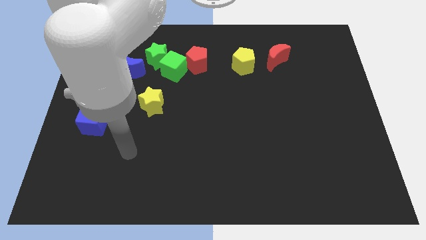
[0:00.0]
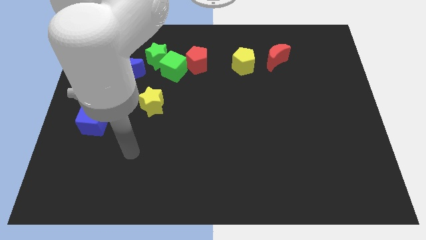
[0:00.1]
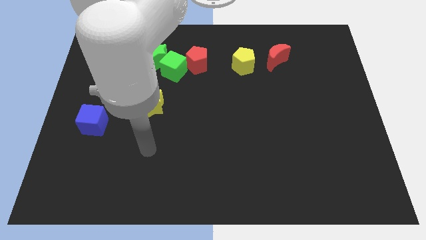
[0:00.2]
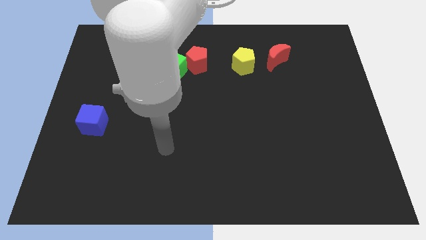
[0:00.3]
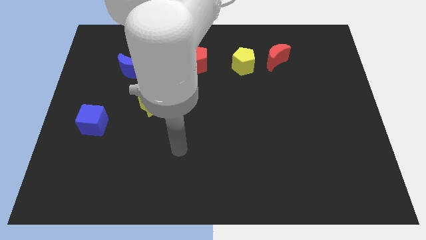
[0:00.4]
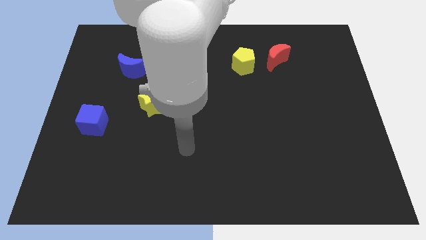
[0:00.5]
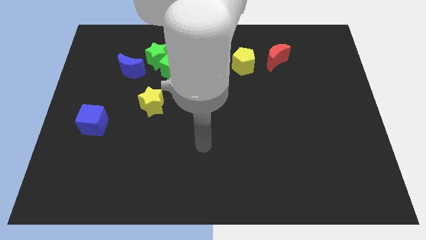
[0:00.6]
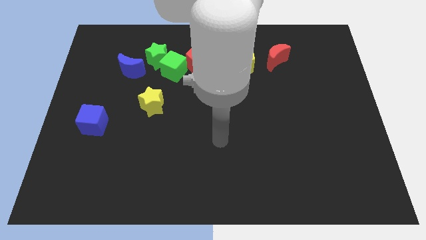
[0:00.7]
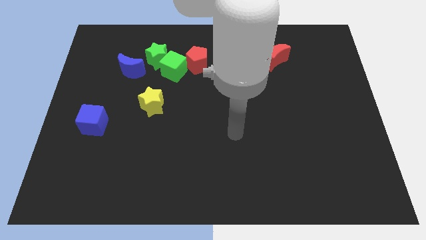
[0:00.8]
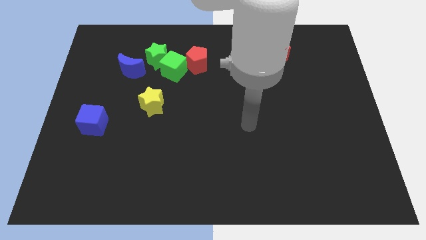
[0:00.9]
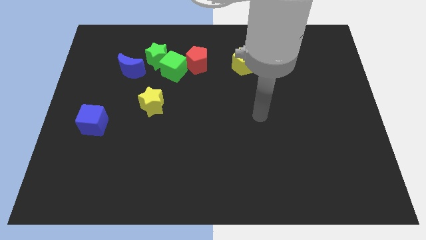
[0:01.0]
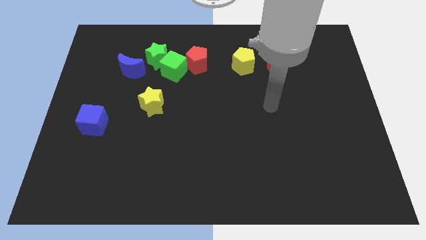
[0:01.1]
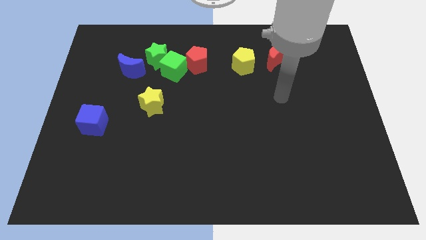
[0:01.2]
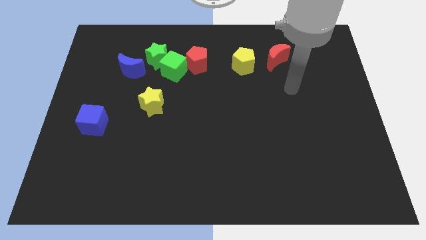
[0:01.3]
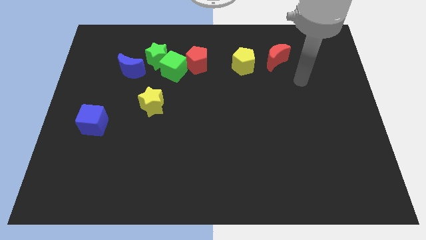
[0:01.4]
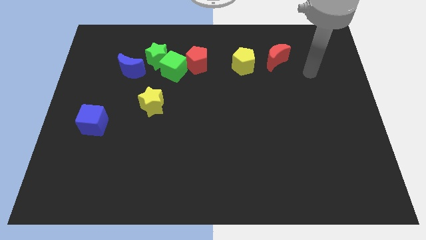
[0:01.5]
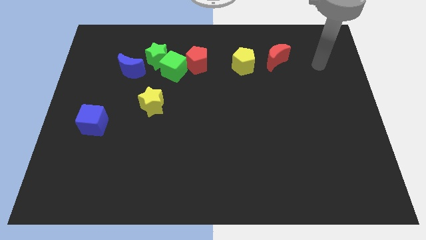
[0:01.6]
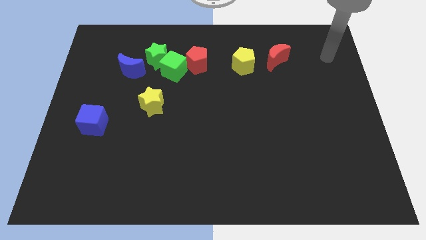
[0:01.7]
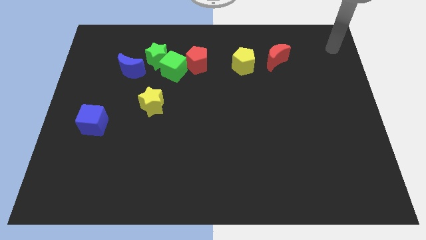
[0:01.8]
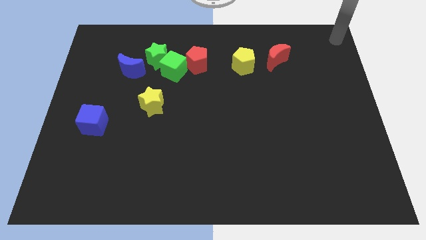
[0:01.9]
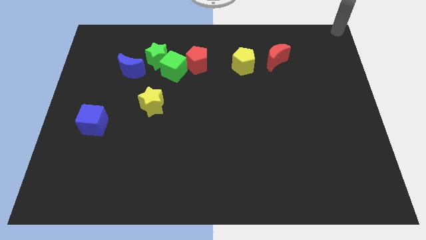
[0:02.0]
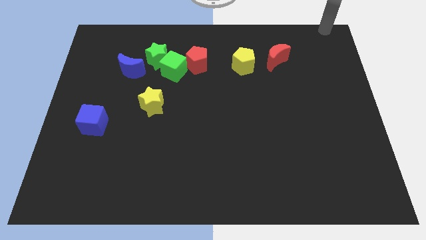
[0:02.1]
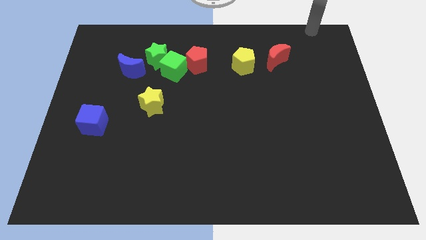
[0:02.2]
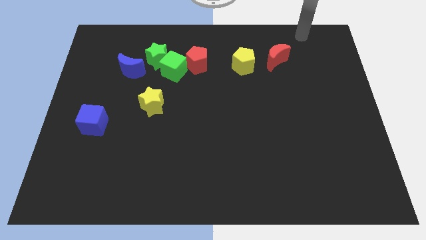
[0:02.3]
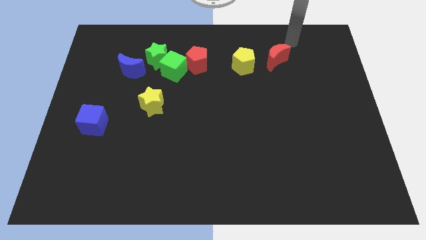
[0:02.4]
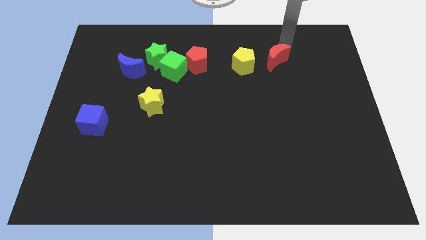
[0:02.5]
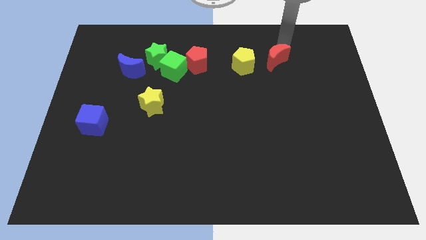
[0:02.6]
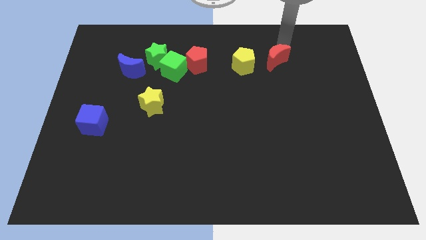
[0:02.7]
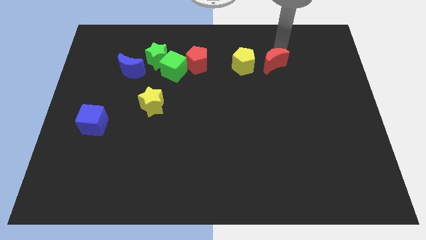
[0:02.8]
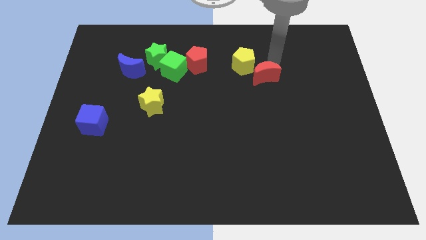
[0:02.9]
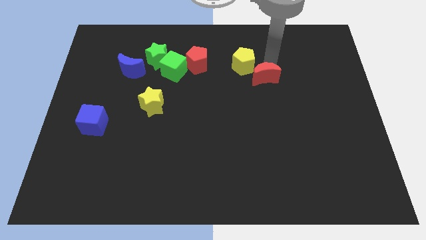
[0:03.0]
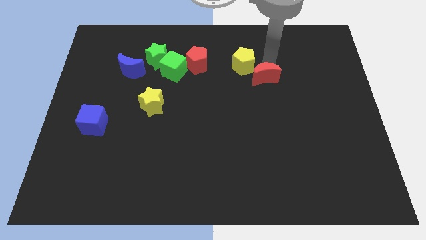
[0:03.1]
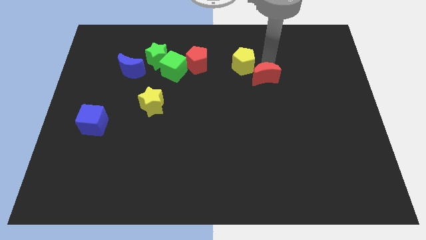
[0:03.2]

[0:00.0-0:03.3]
point your arm above red moon

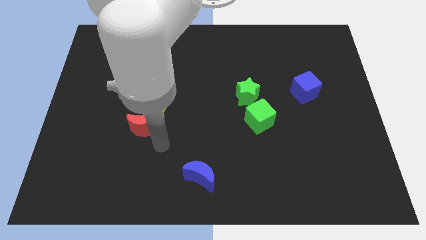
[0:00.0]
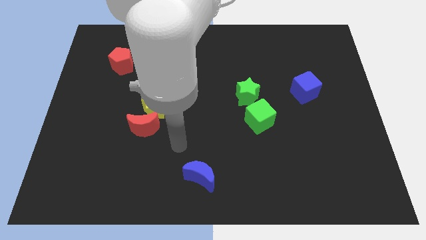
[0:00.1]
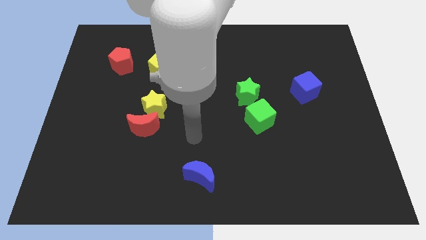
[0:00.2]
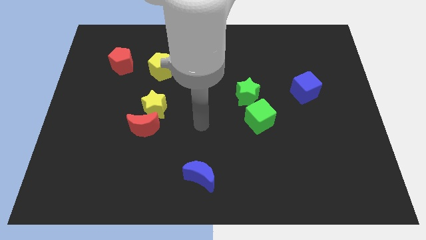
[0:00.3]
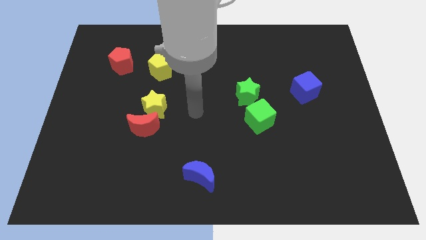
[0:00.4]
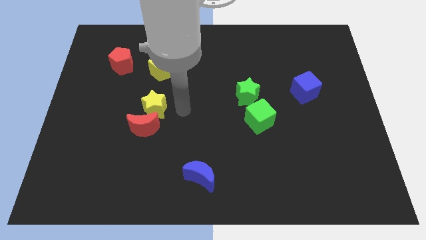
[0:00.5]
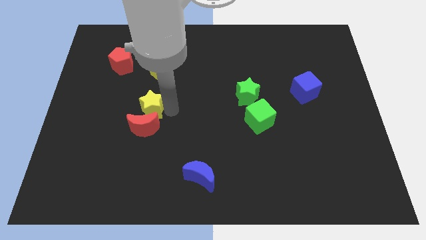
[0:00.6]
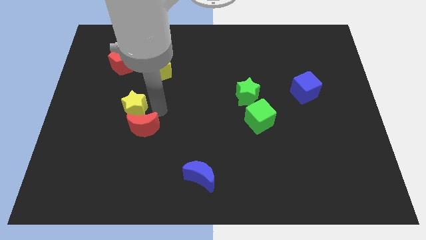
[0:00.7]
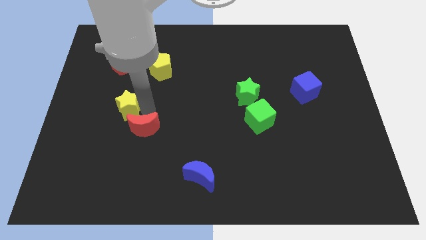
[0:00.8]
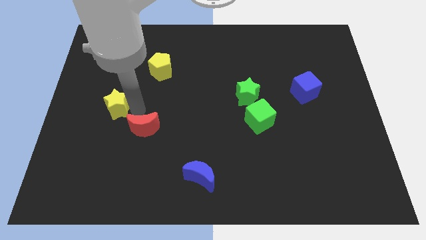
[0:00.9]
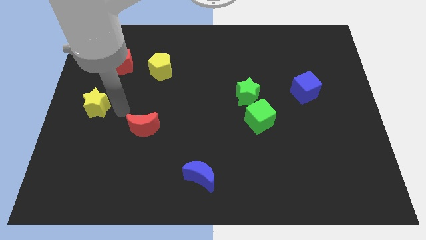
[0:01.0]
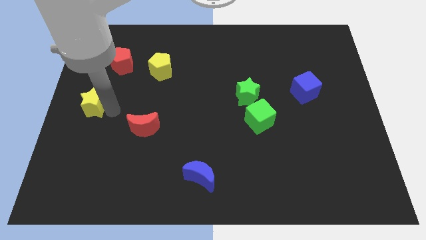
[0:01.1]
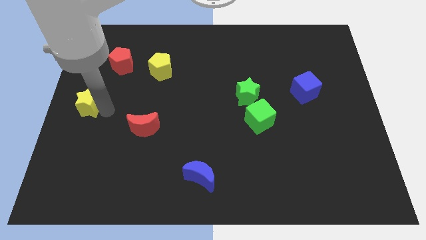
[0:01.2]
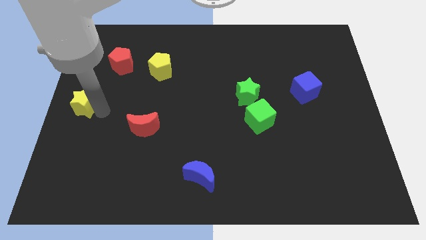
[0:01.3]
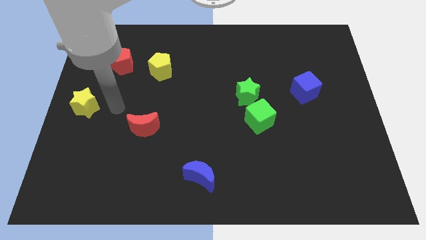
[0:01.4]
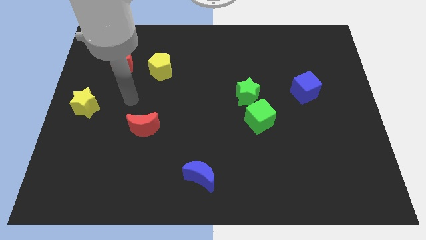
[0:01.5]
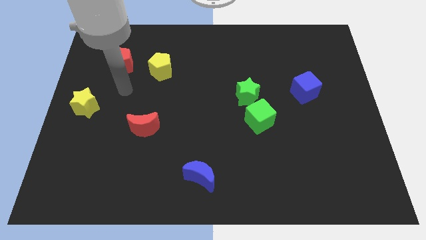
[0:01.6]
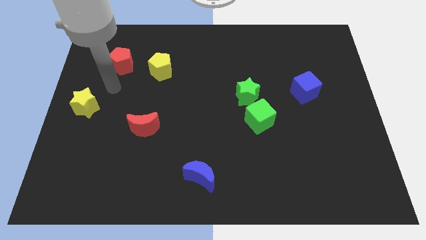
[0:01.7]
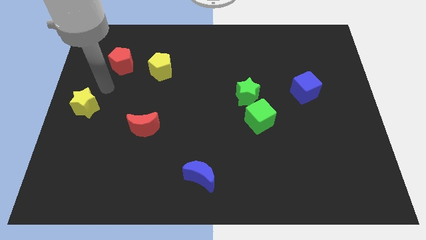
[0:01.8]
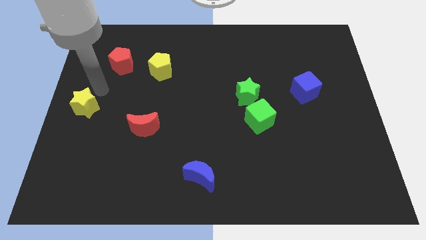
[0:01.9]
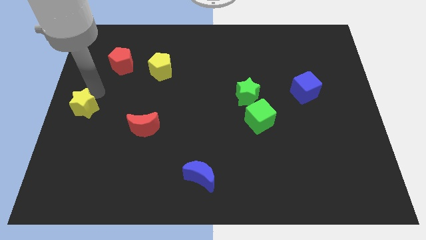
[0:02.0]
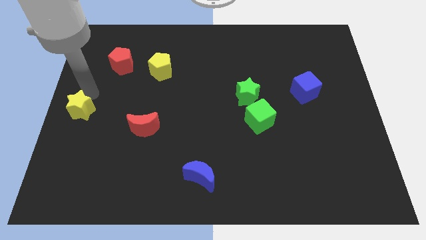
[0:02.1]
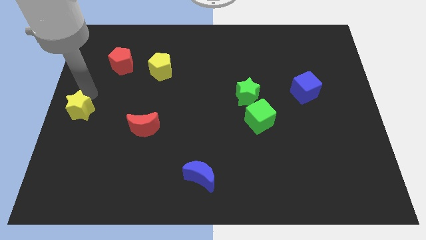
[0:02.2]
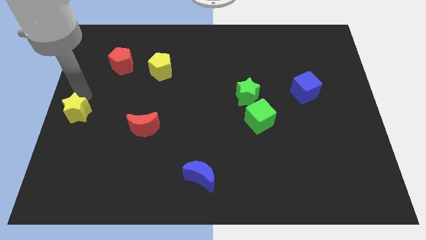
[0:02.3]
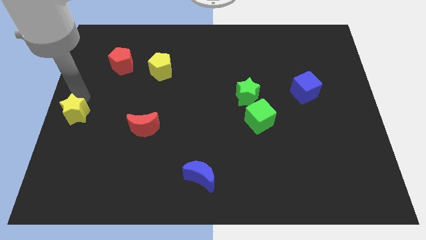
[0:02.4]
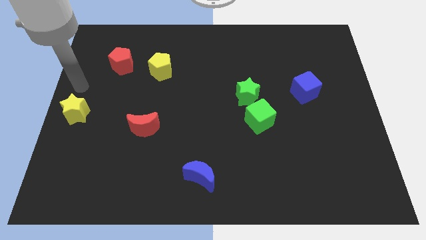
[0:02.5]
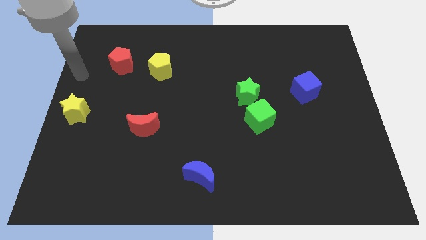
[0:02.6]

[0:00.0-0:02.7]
move the yellow star to the center left of the table

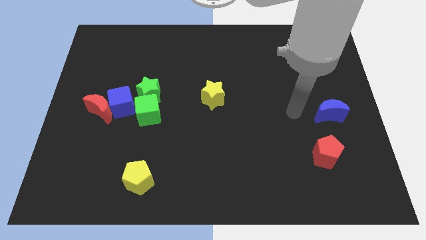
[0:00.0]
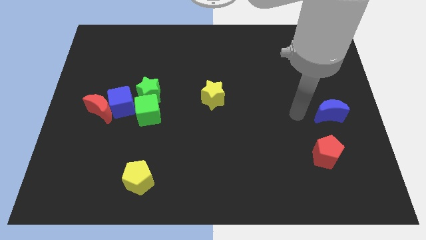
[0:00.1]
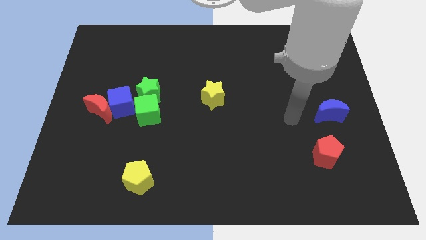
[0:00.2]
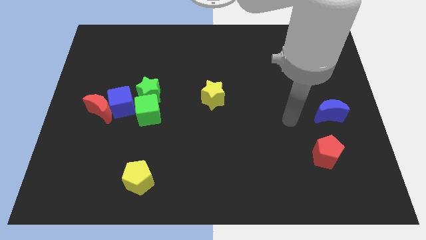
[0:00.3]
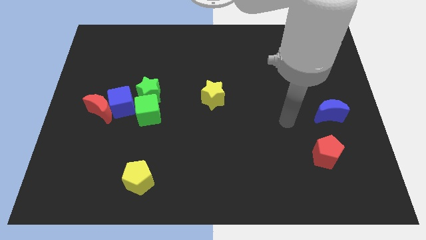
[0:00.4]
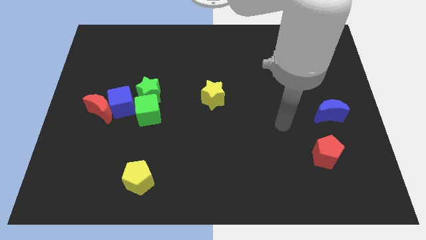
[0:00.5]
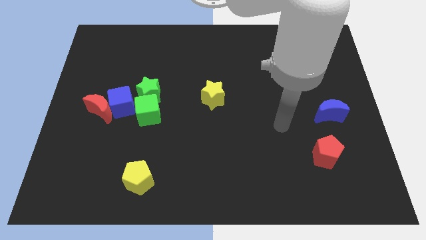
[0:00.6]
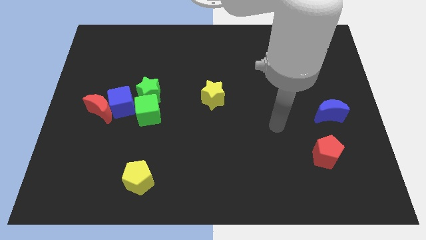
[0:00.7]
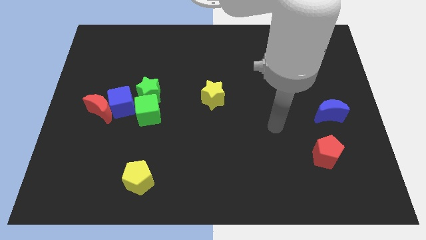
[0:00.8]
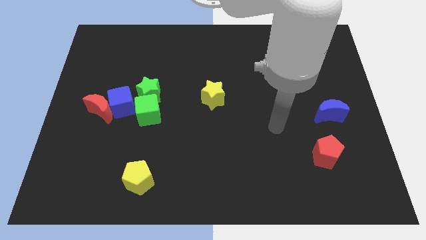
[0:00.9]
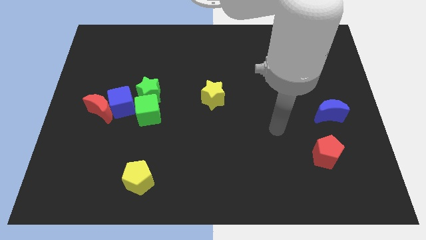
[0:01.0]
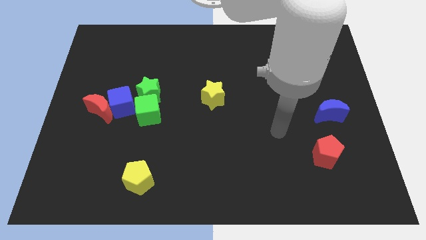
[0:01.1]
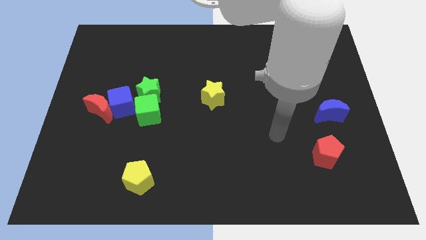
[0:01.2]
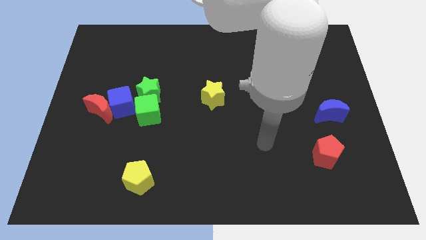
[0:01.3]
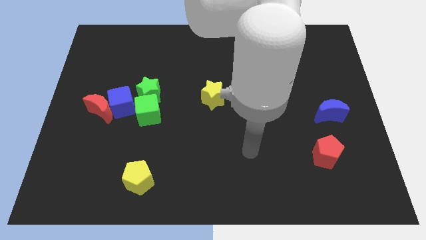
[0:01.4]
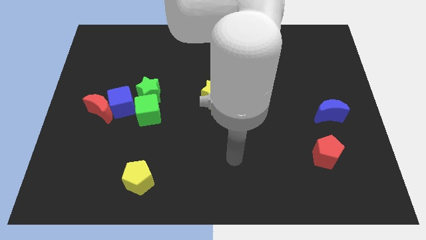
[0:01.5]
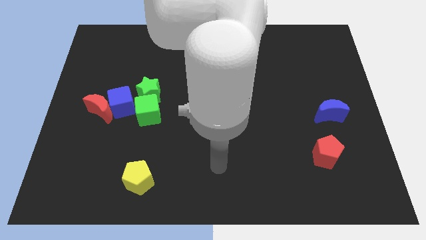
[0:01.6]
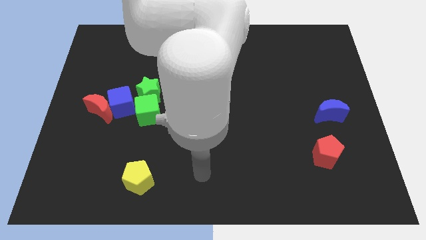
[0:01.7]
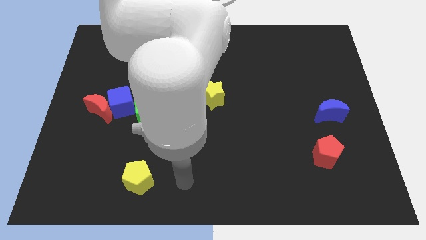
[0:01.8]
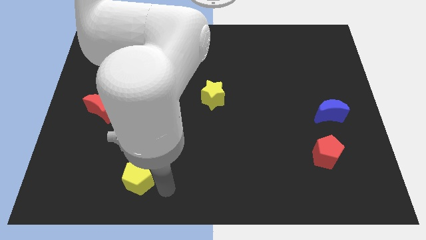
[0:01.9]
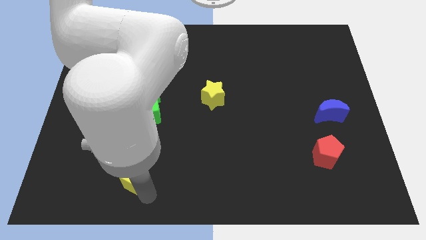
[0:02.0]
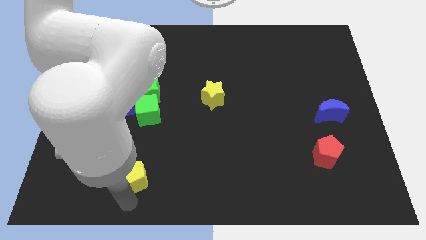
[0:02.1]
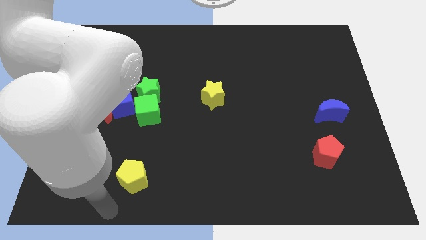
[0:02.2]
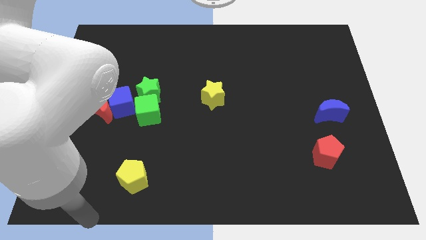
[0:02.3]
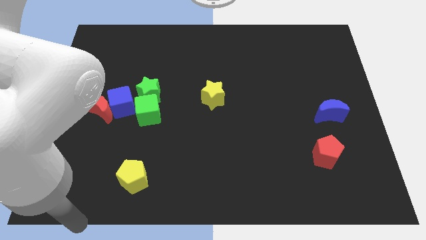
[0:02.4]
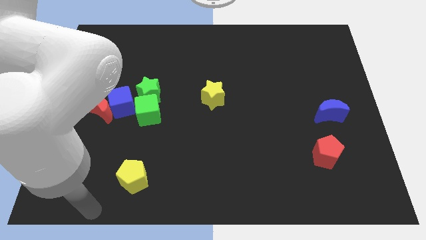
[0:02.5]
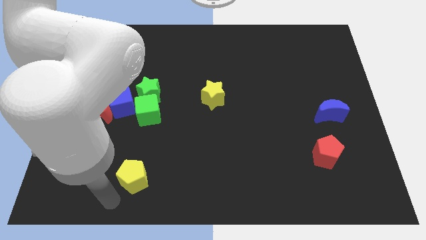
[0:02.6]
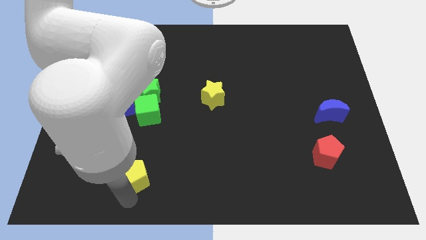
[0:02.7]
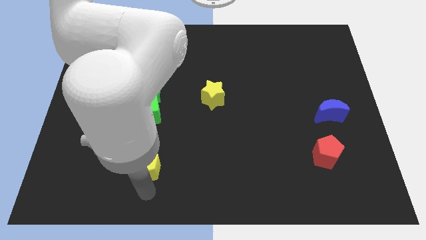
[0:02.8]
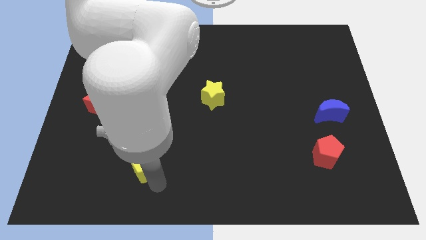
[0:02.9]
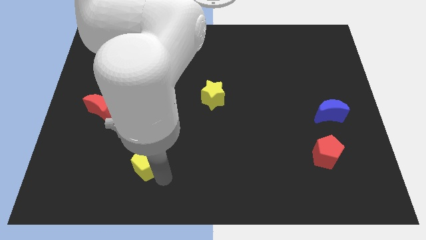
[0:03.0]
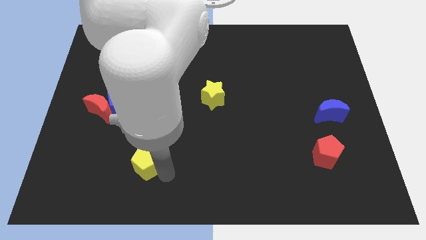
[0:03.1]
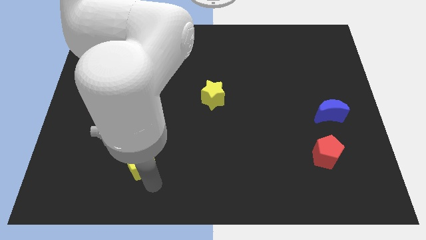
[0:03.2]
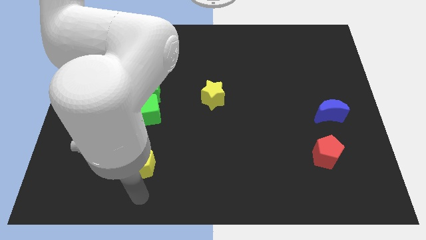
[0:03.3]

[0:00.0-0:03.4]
slightly push the yellow pentagon upwards
